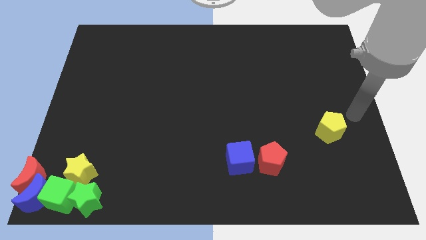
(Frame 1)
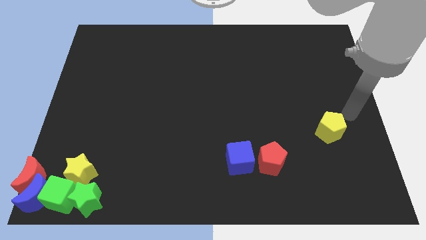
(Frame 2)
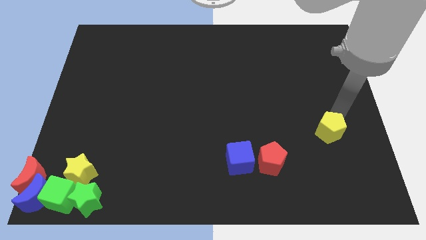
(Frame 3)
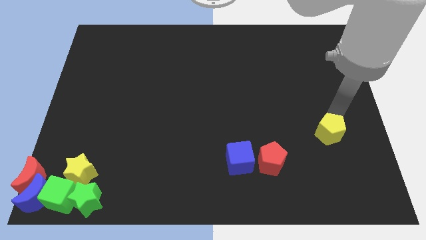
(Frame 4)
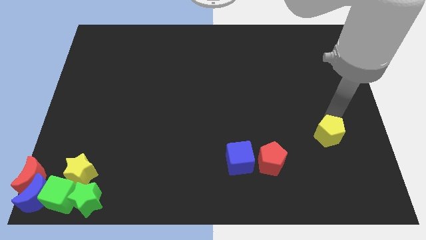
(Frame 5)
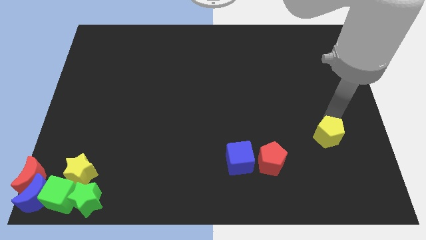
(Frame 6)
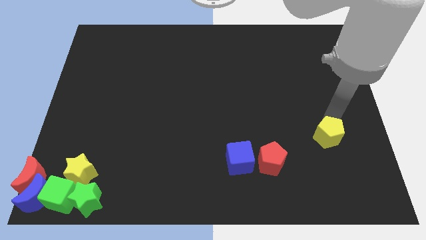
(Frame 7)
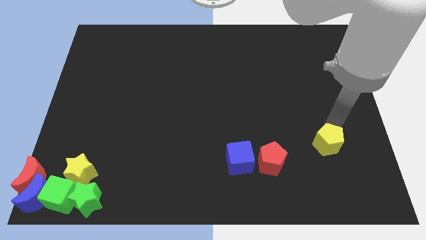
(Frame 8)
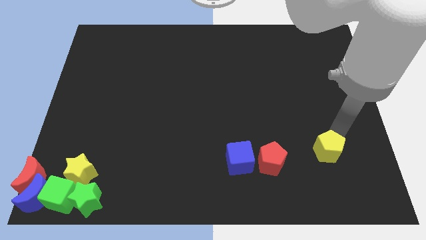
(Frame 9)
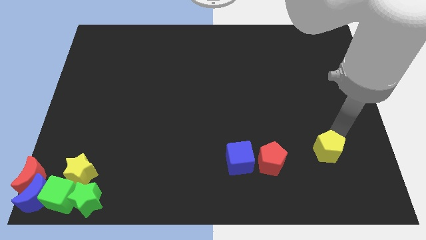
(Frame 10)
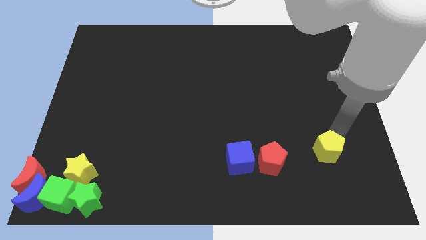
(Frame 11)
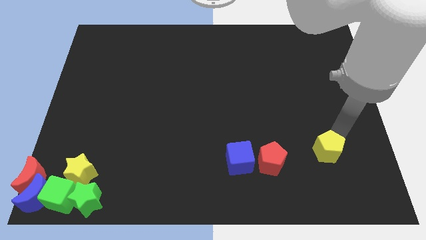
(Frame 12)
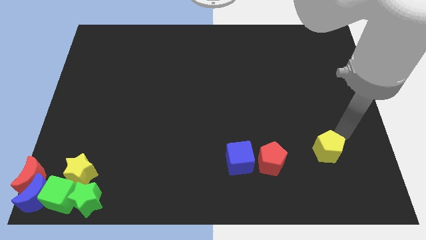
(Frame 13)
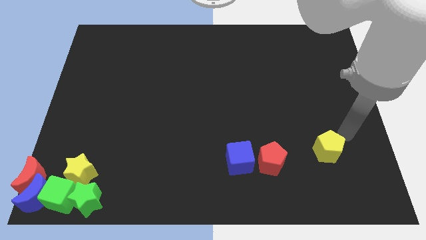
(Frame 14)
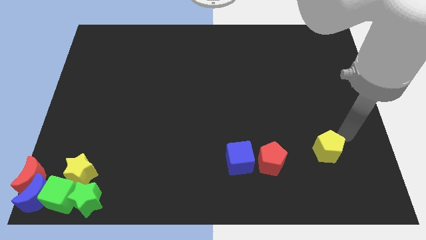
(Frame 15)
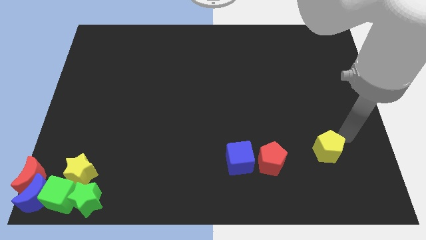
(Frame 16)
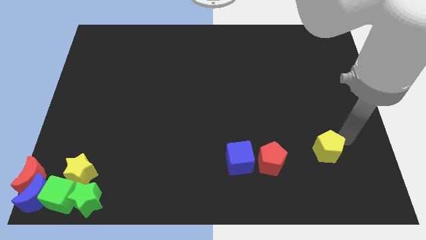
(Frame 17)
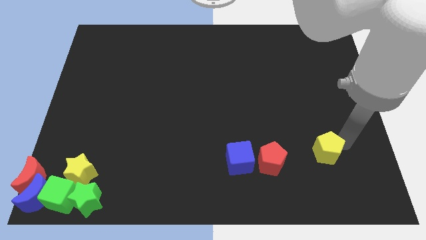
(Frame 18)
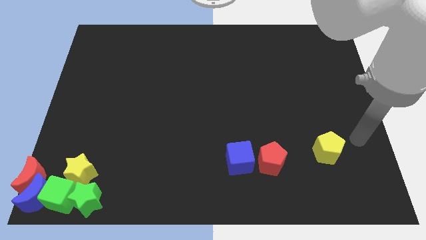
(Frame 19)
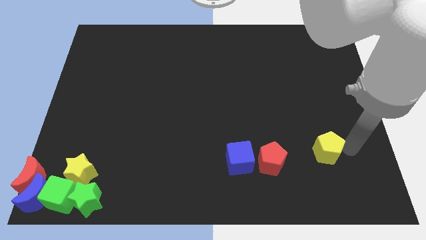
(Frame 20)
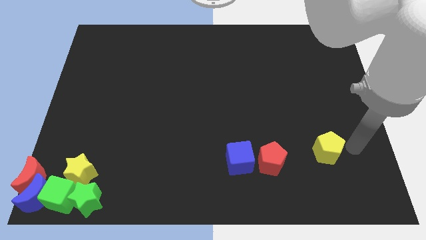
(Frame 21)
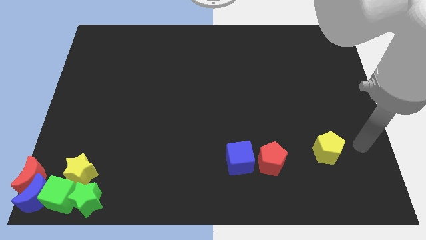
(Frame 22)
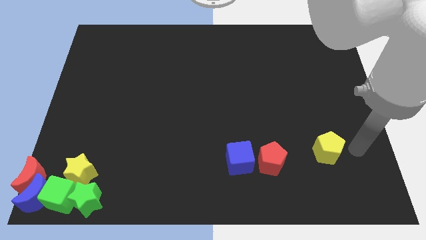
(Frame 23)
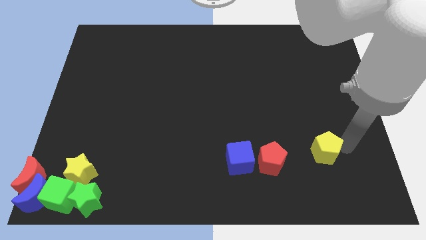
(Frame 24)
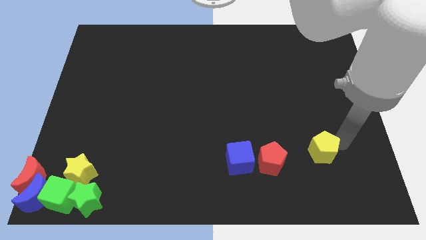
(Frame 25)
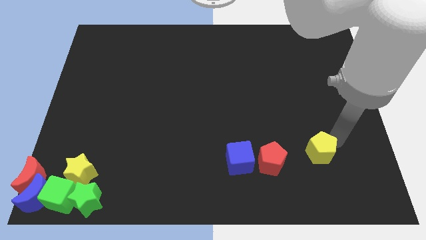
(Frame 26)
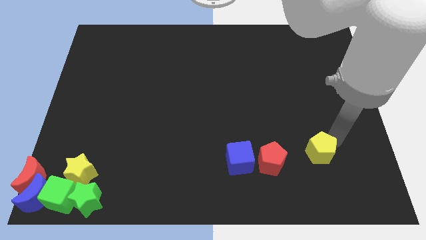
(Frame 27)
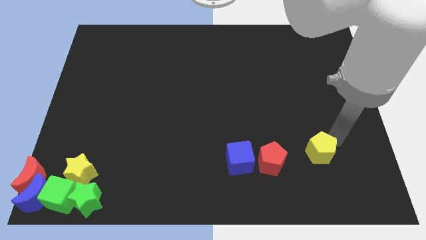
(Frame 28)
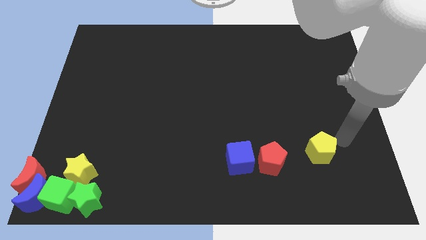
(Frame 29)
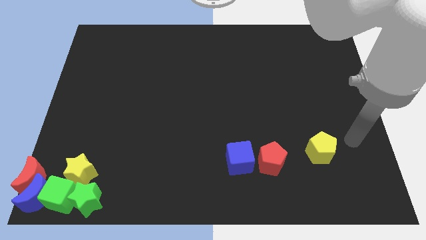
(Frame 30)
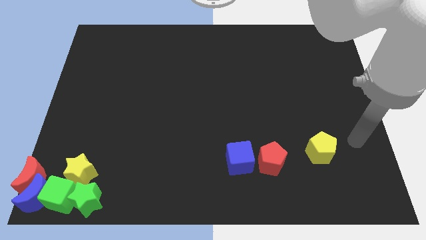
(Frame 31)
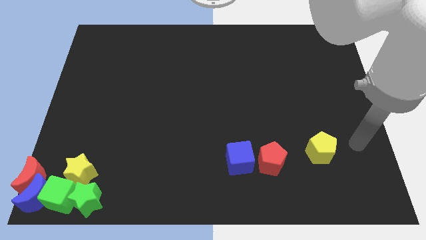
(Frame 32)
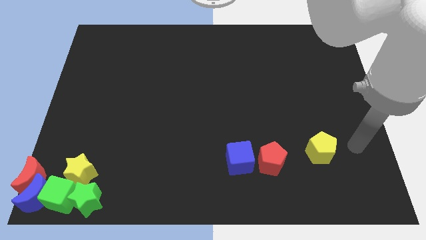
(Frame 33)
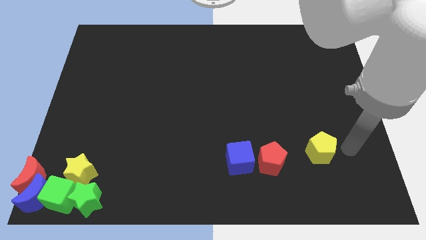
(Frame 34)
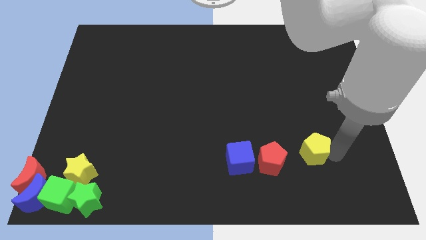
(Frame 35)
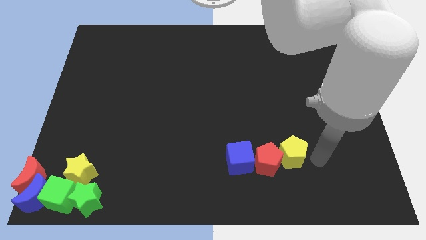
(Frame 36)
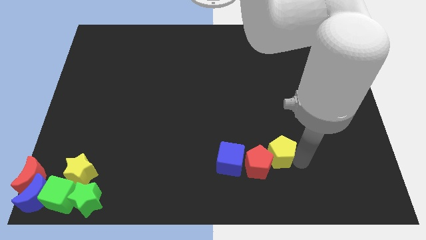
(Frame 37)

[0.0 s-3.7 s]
move the yellow pentagon right to the red penatgon

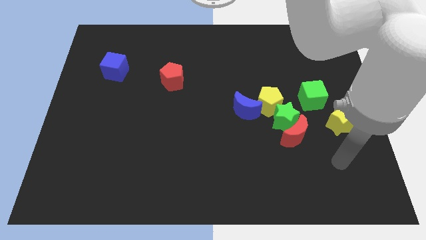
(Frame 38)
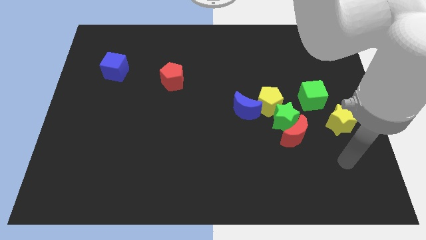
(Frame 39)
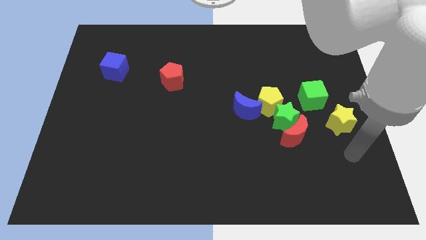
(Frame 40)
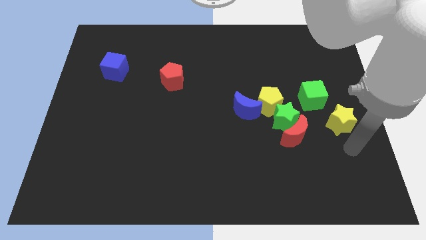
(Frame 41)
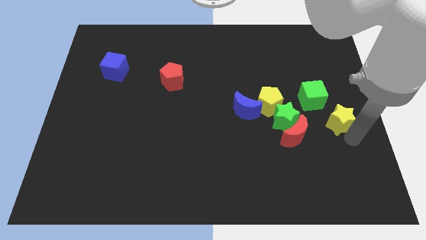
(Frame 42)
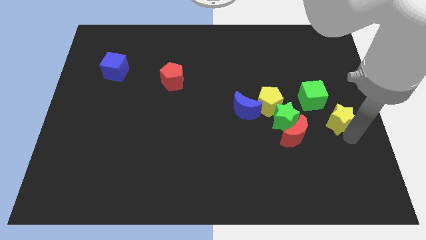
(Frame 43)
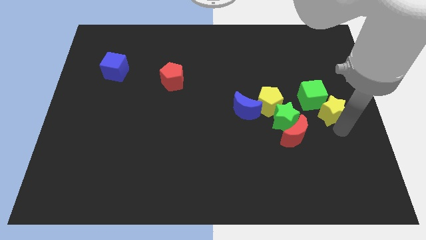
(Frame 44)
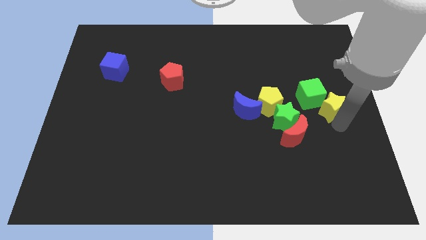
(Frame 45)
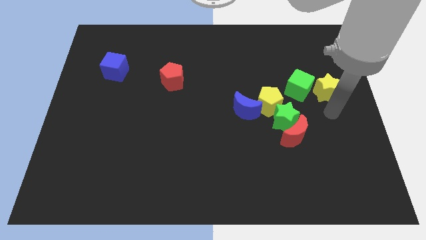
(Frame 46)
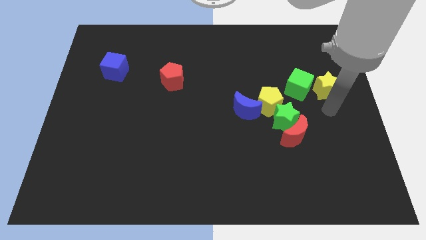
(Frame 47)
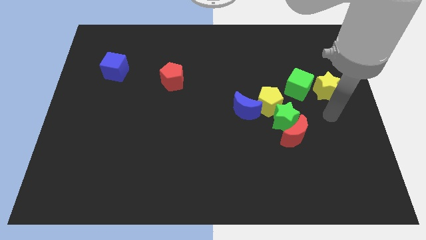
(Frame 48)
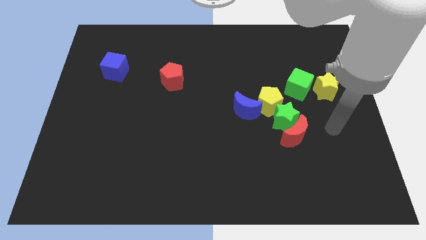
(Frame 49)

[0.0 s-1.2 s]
place the green cube top right to the yellow pentagon

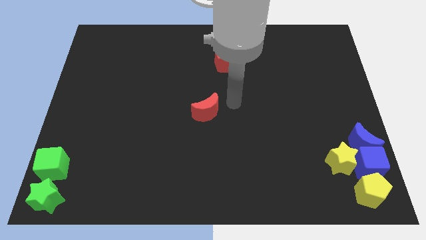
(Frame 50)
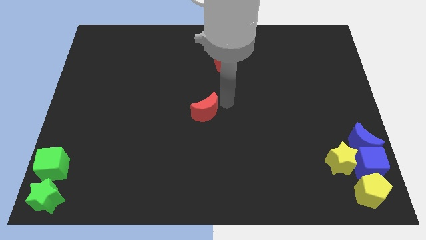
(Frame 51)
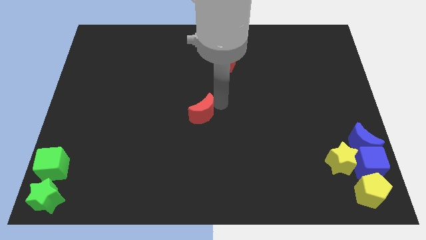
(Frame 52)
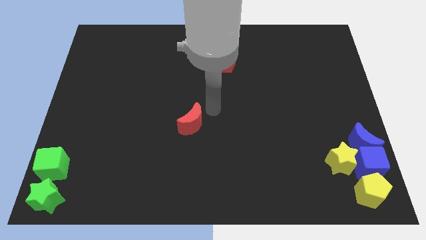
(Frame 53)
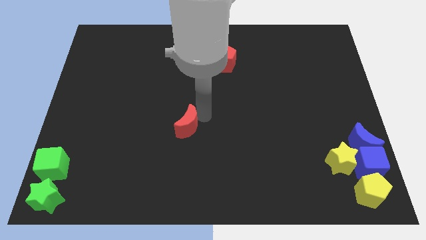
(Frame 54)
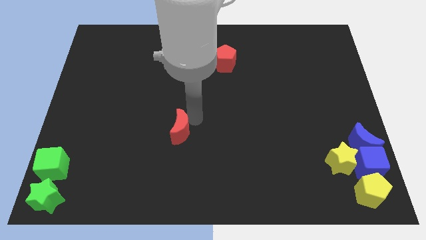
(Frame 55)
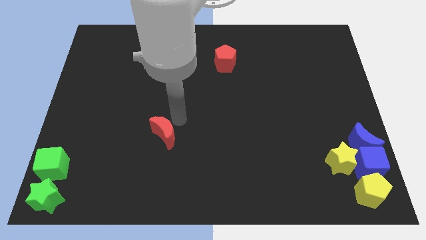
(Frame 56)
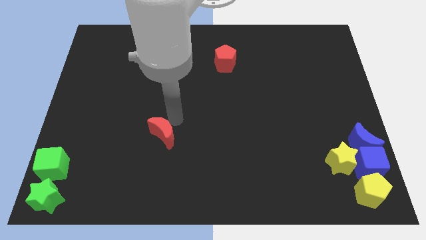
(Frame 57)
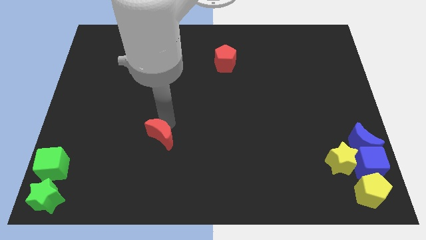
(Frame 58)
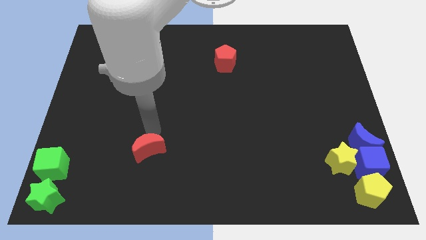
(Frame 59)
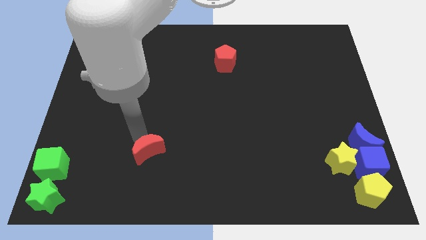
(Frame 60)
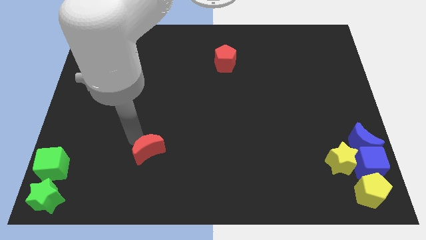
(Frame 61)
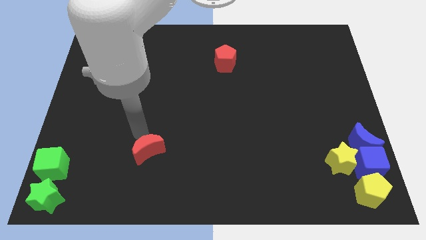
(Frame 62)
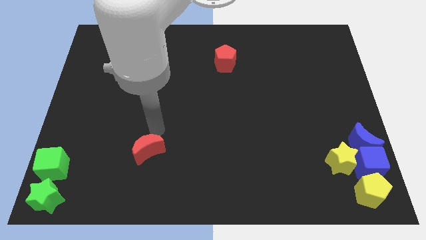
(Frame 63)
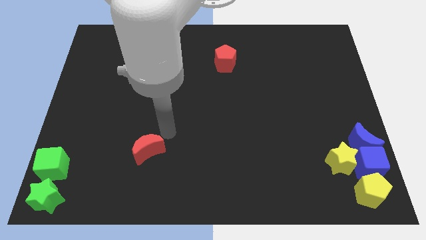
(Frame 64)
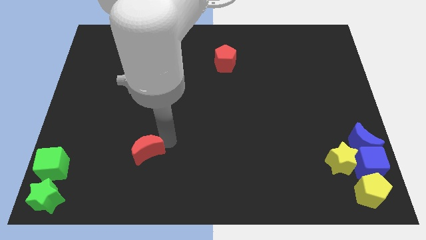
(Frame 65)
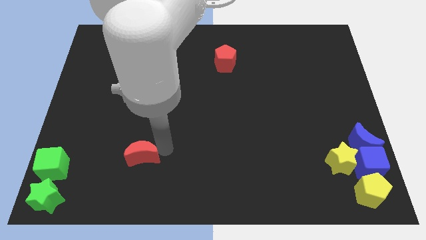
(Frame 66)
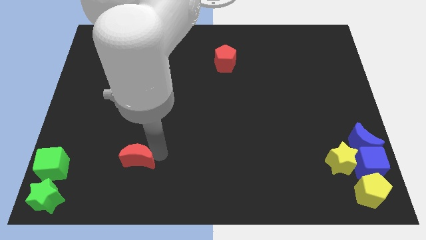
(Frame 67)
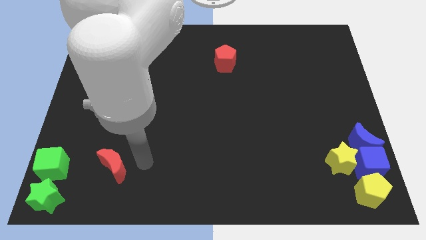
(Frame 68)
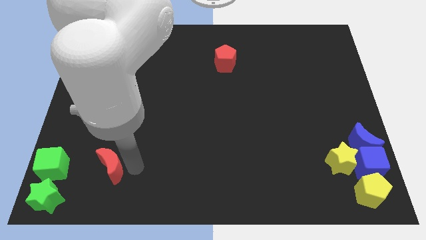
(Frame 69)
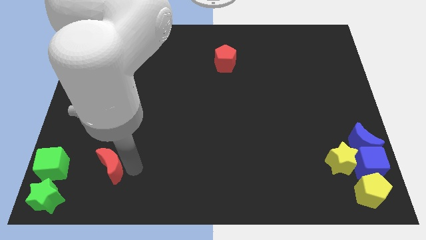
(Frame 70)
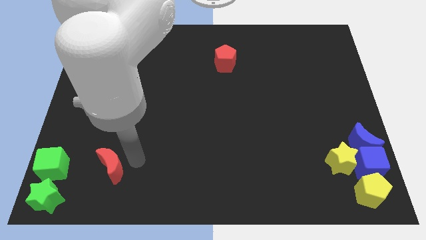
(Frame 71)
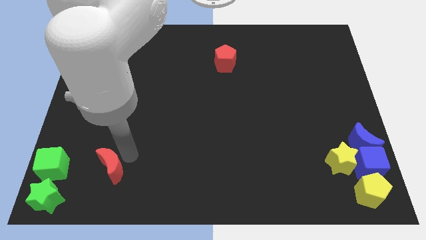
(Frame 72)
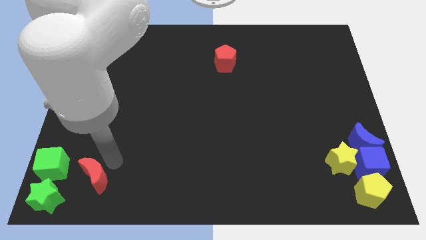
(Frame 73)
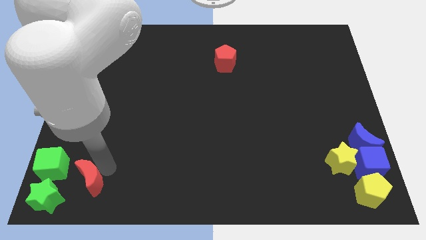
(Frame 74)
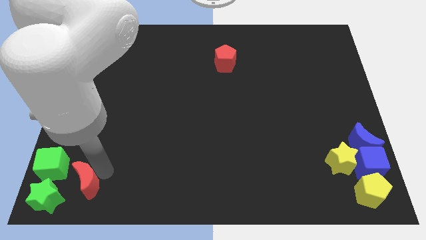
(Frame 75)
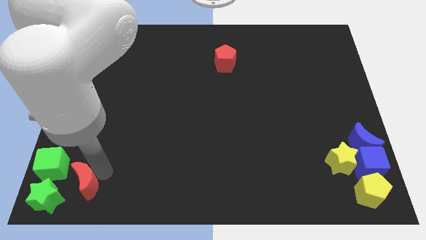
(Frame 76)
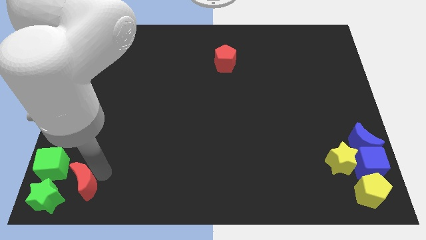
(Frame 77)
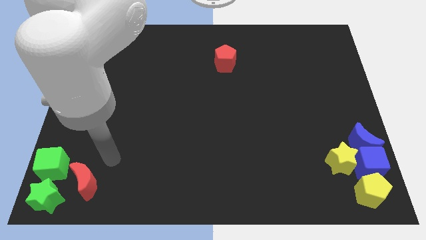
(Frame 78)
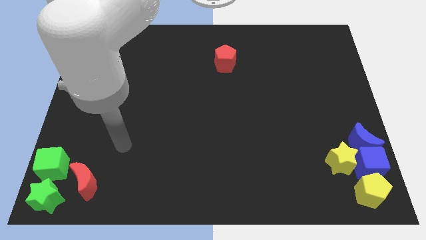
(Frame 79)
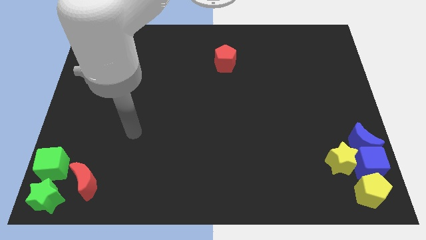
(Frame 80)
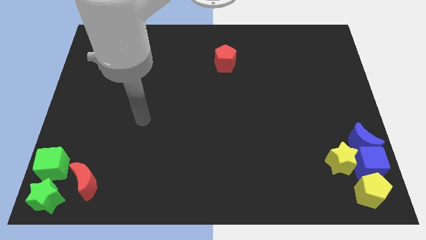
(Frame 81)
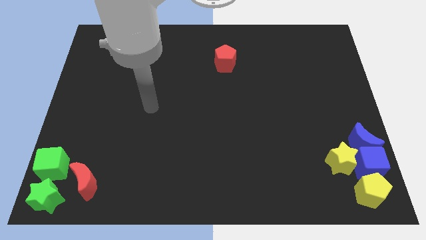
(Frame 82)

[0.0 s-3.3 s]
move the red crescent right below the green cube

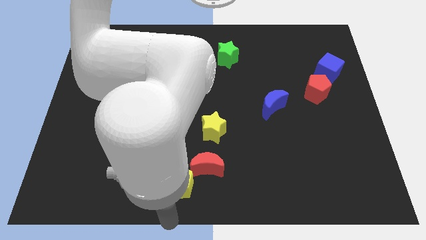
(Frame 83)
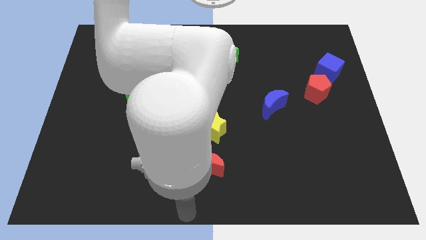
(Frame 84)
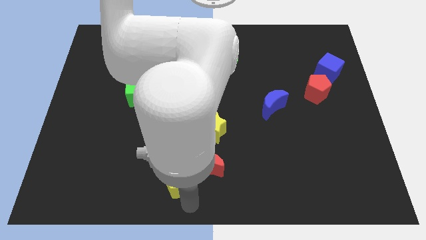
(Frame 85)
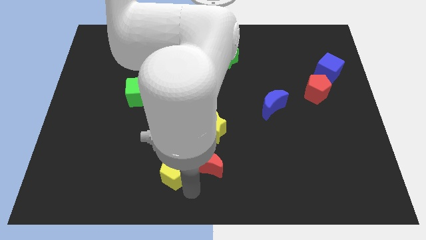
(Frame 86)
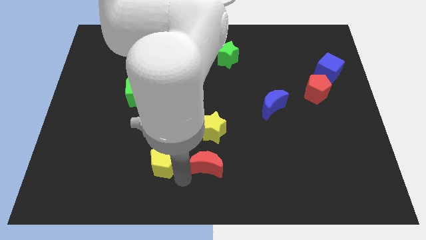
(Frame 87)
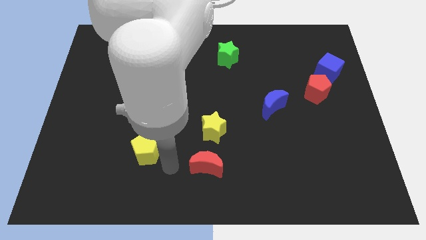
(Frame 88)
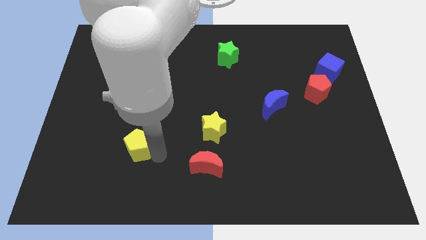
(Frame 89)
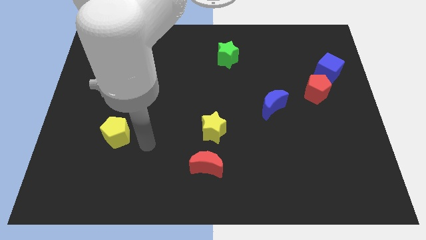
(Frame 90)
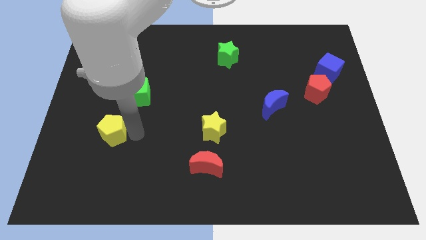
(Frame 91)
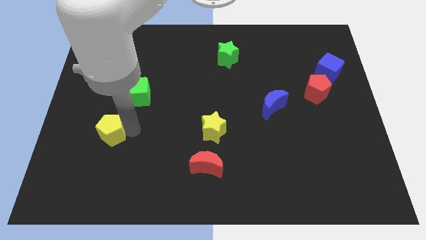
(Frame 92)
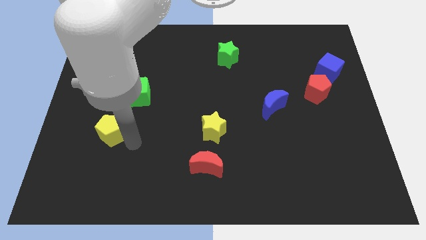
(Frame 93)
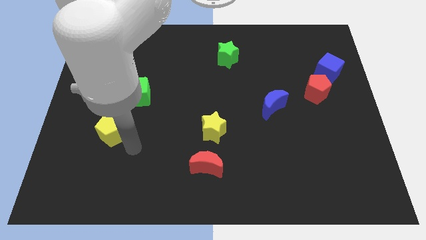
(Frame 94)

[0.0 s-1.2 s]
push yellow pentagon to center left
